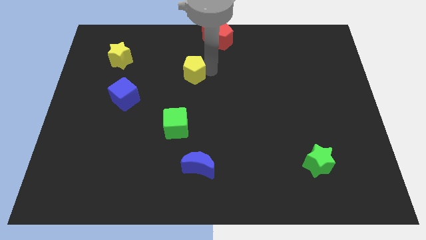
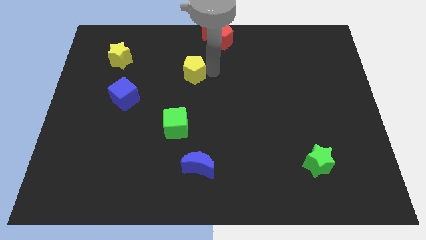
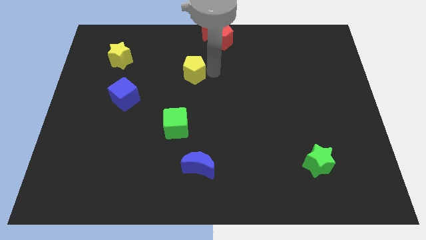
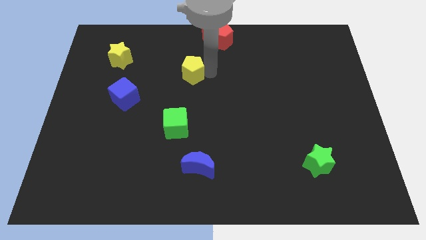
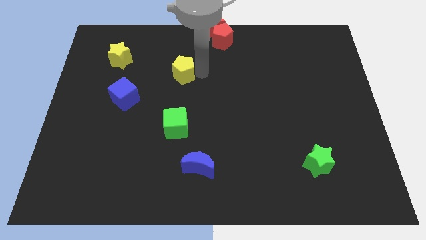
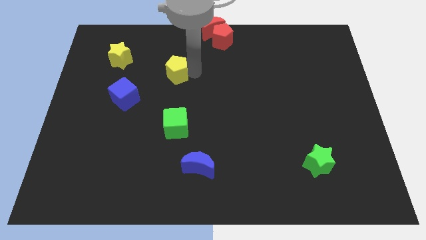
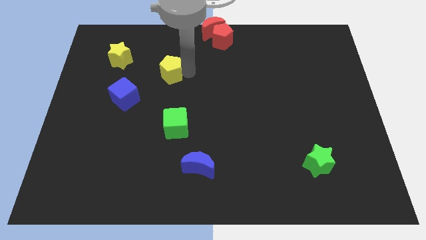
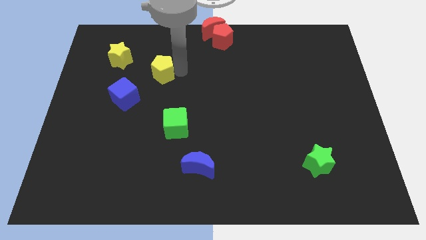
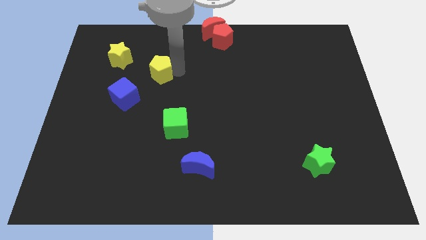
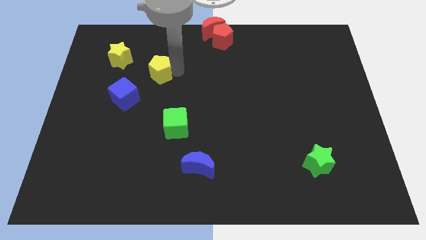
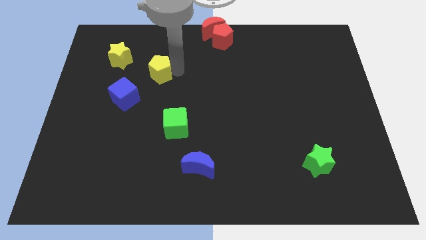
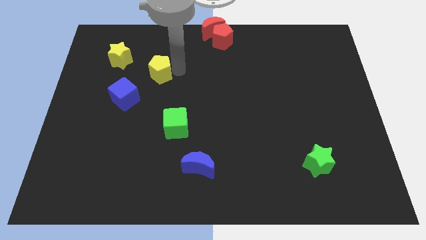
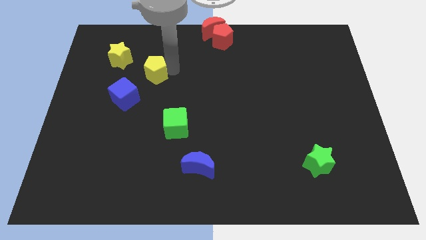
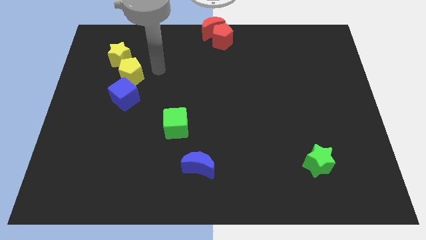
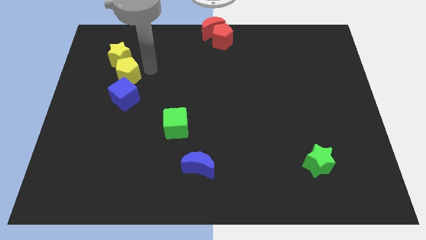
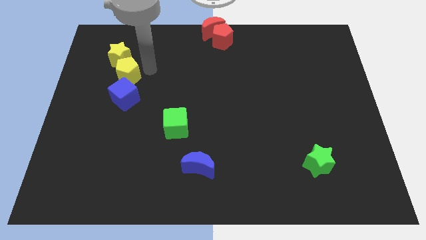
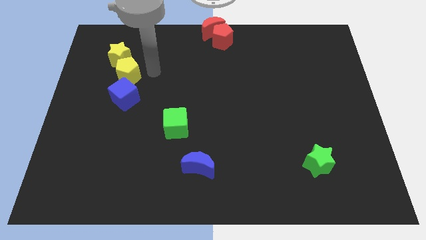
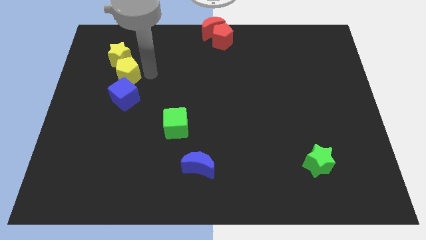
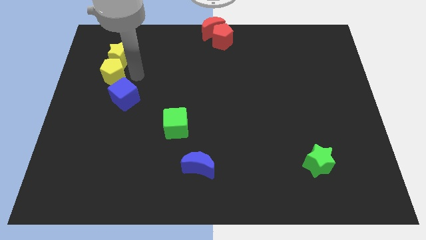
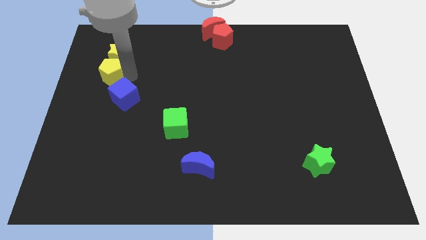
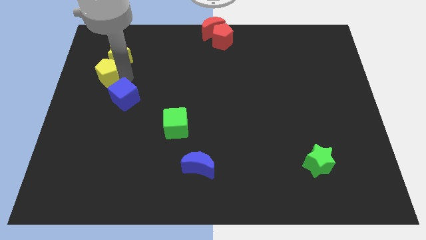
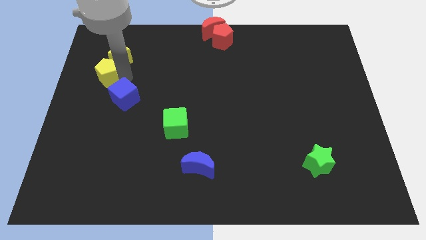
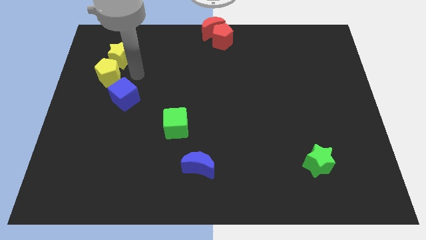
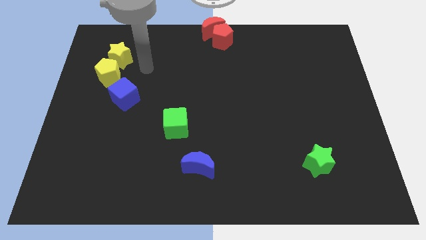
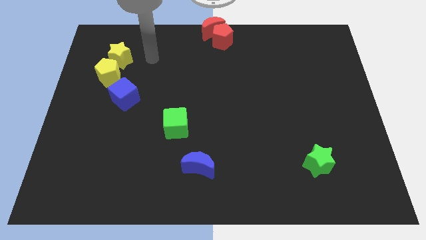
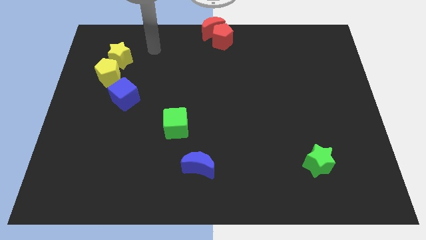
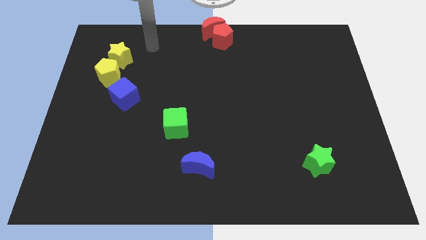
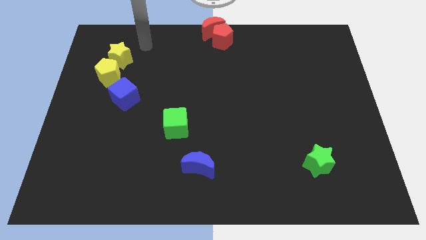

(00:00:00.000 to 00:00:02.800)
place the yellow pentagon below the yellow star

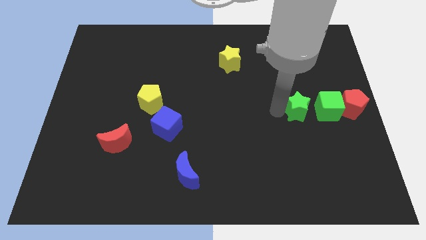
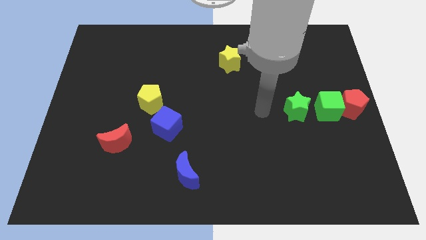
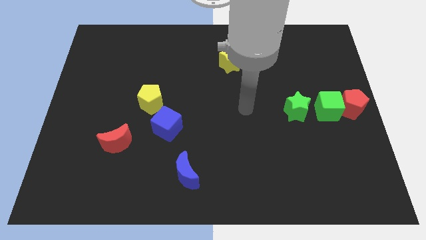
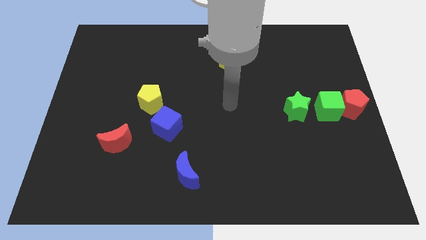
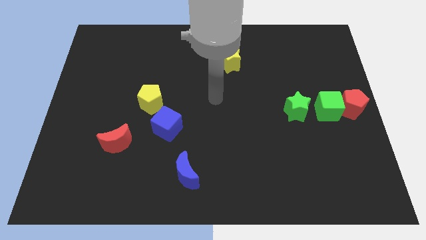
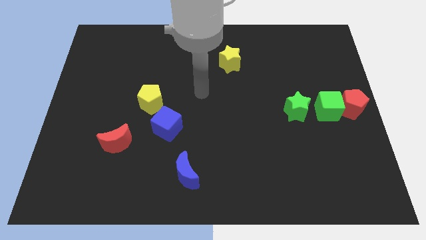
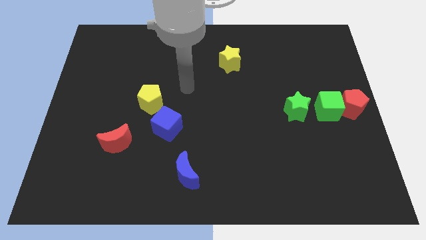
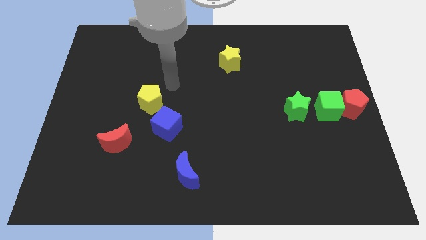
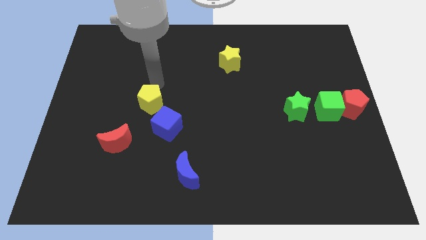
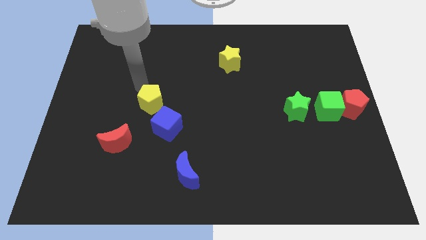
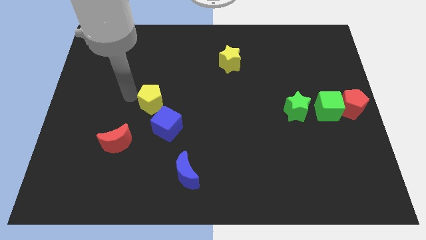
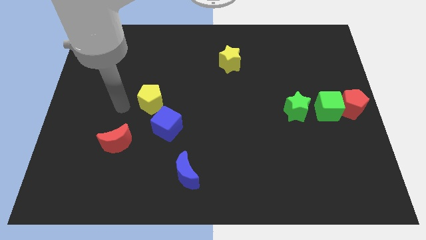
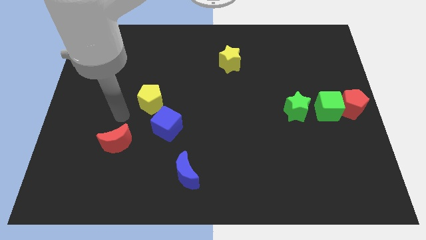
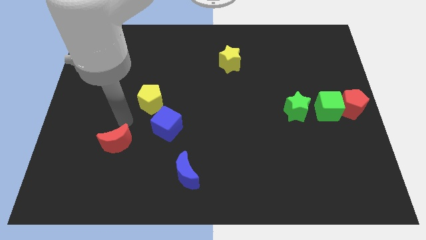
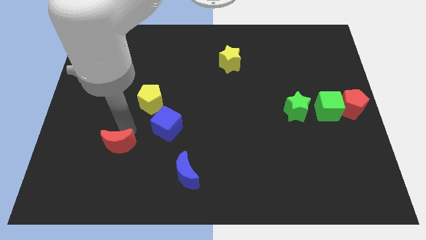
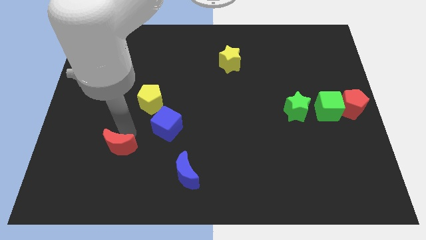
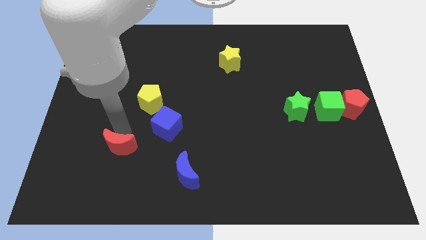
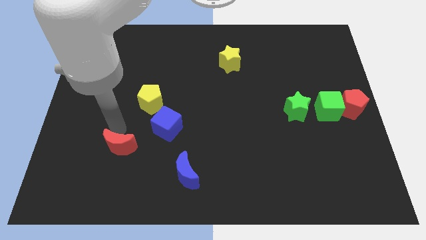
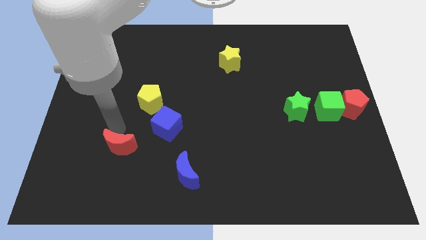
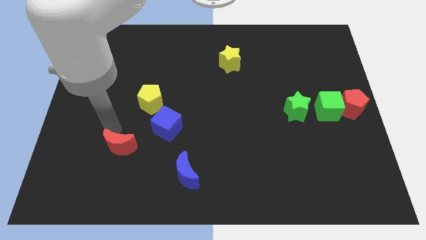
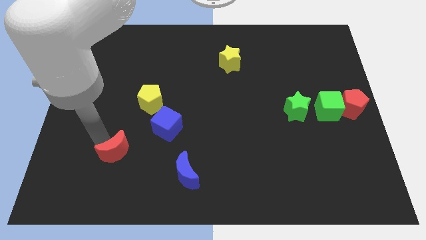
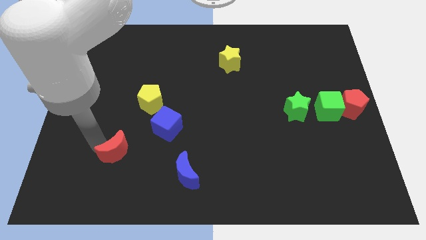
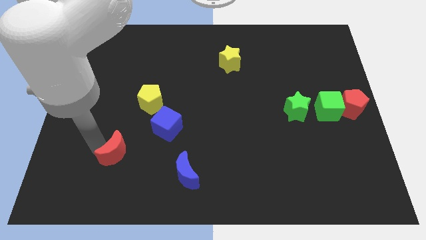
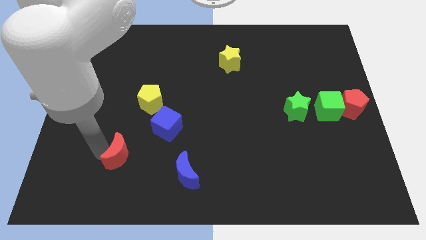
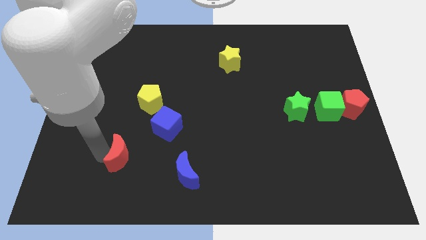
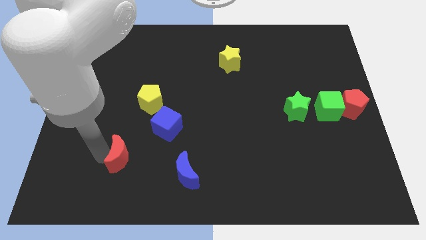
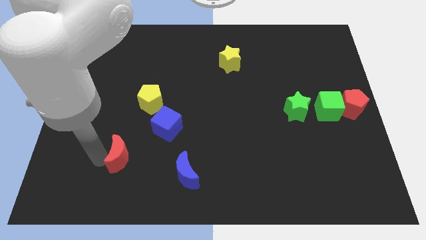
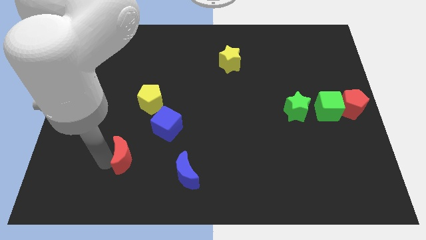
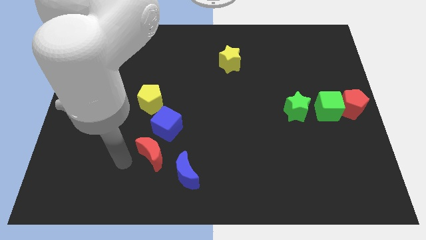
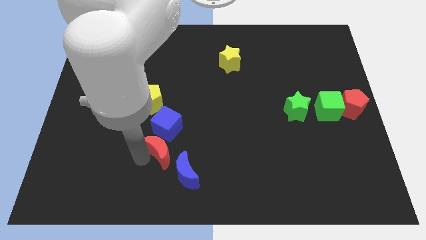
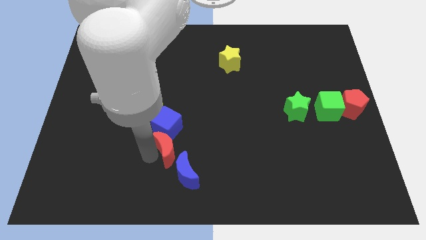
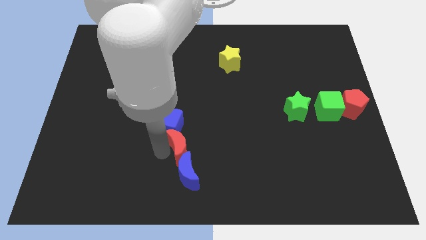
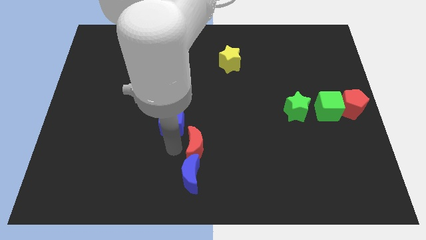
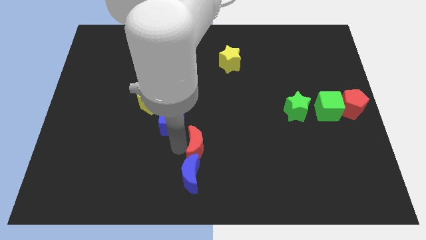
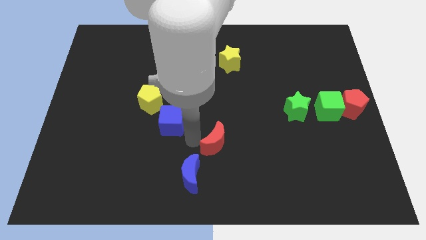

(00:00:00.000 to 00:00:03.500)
move the arm away from the green star

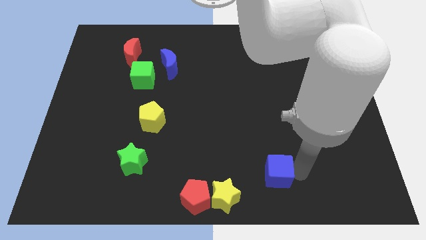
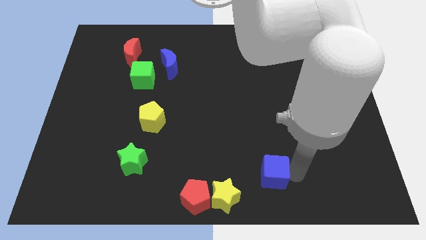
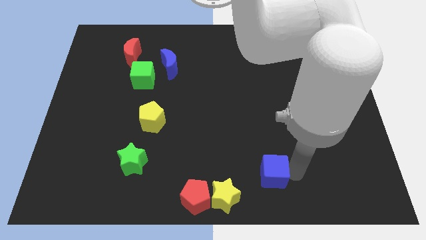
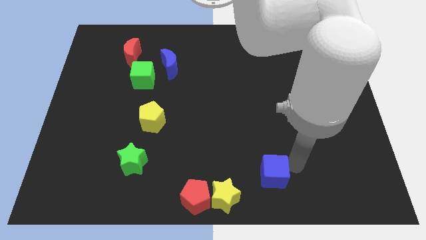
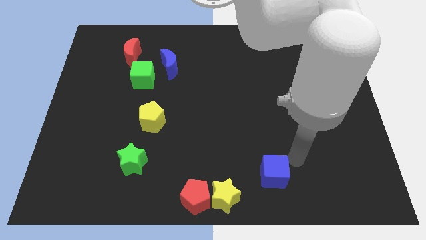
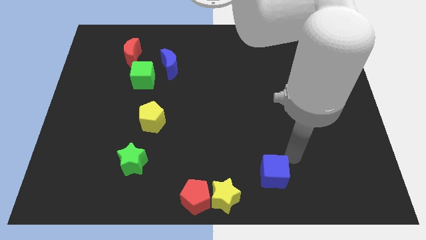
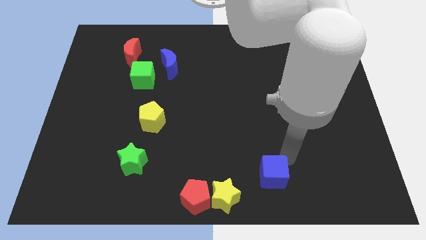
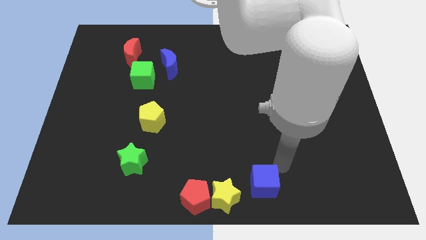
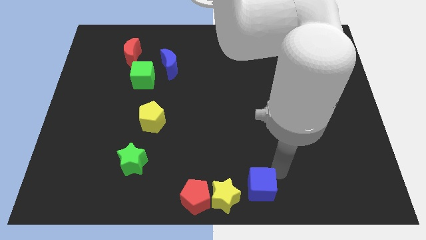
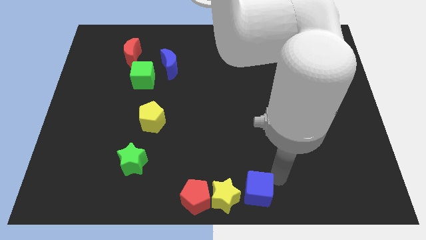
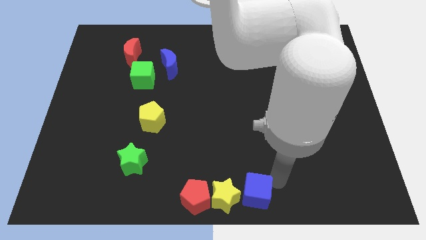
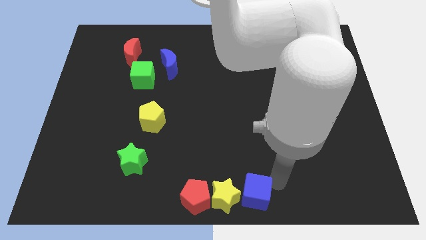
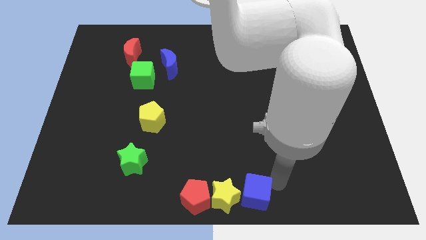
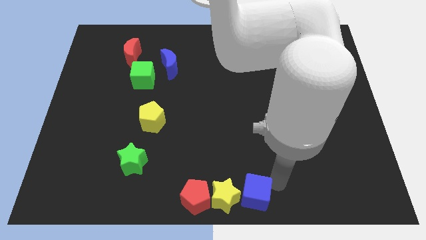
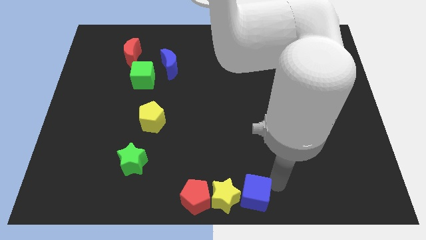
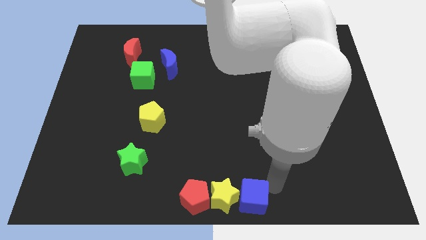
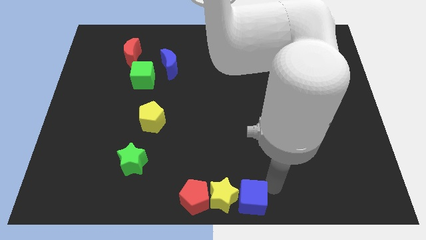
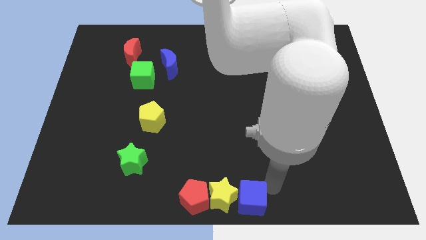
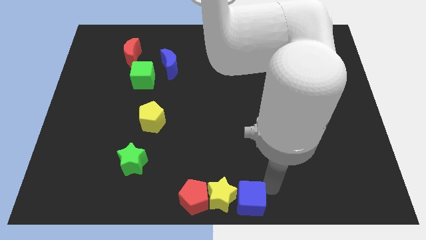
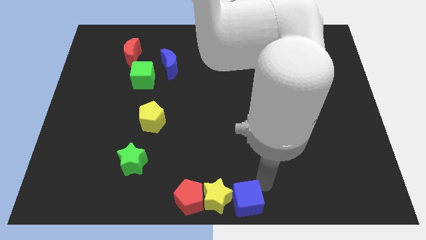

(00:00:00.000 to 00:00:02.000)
push the blue cube in the yellow star

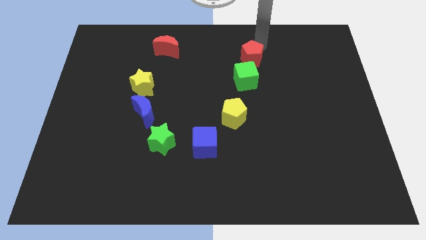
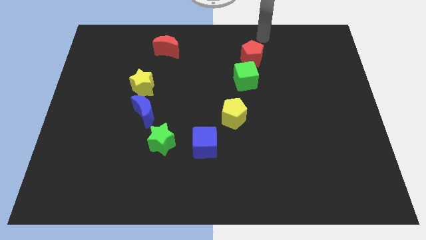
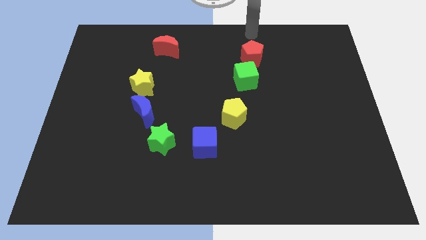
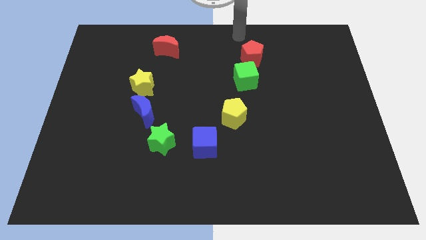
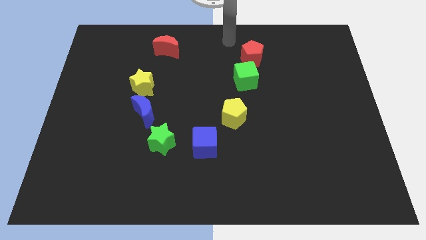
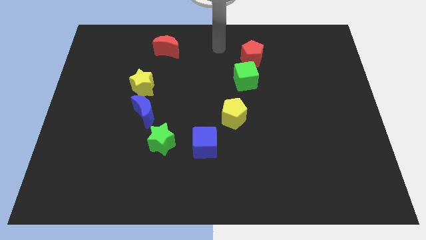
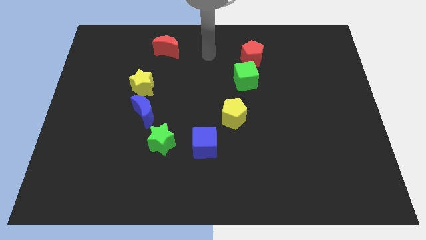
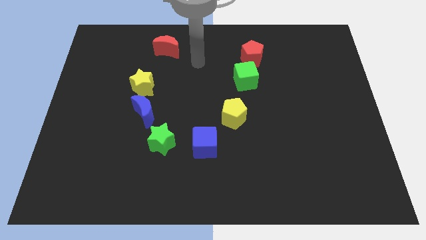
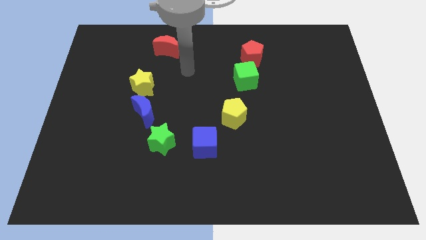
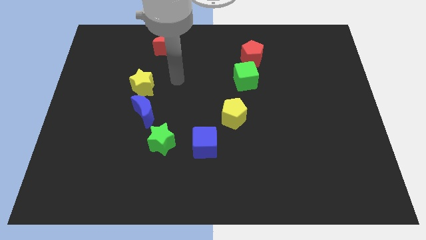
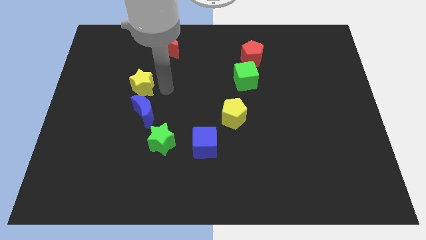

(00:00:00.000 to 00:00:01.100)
move your hand to the right of the yellow star
